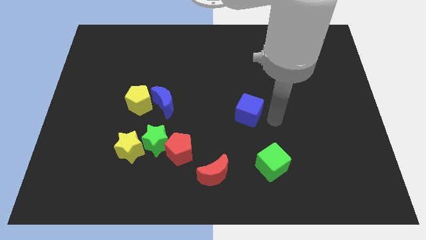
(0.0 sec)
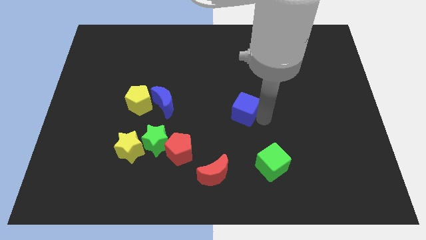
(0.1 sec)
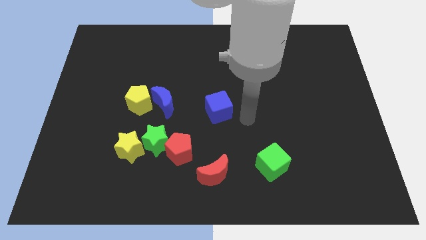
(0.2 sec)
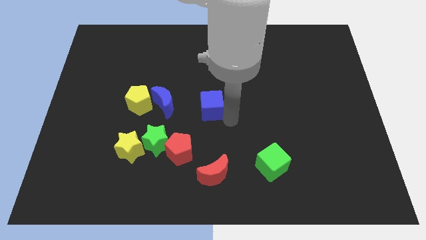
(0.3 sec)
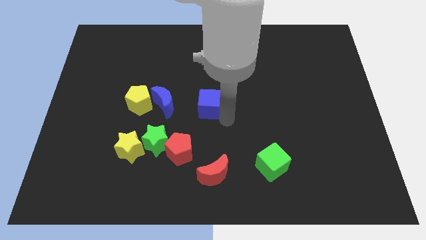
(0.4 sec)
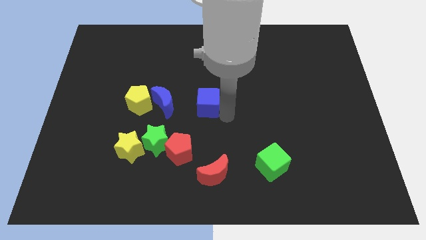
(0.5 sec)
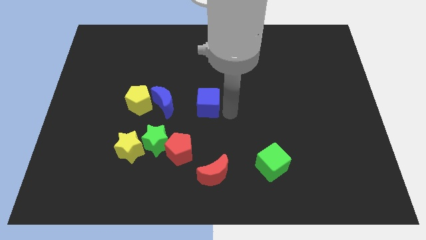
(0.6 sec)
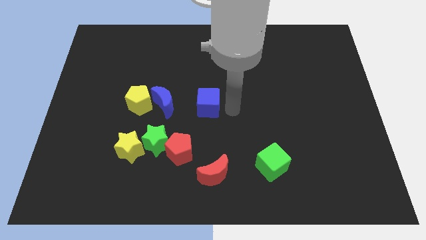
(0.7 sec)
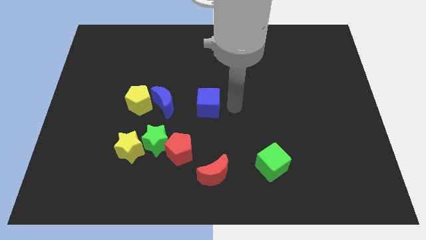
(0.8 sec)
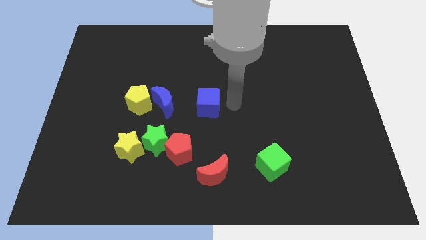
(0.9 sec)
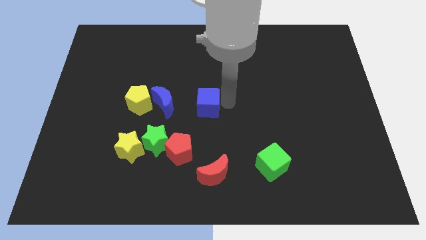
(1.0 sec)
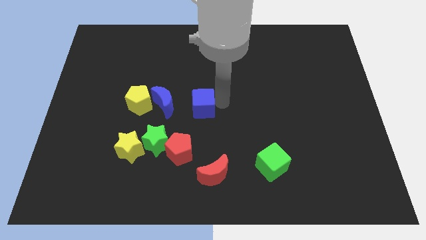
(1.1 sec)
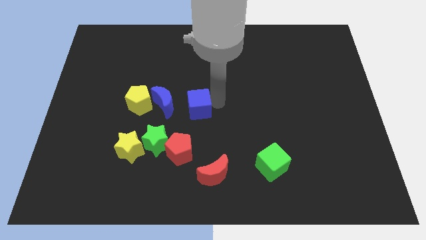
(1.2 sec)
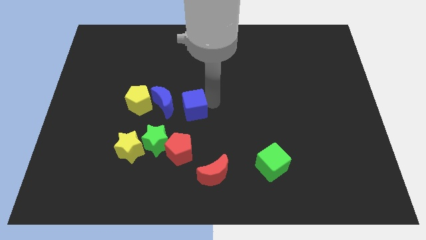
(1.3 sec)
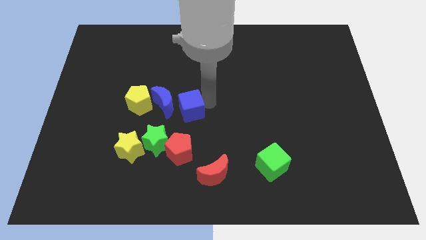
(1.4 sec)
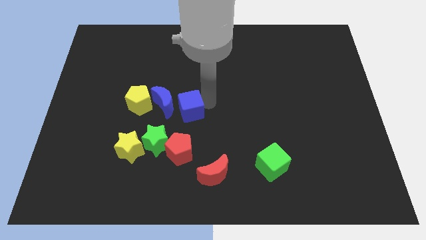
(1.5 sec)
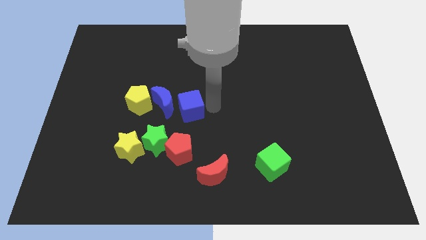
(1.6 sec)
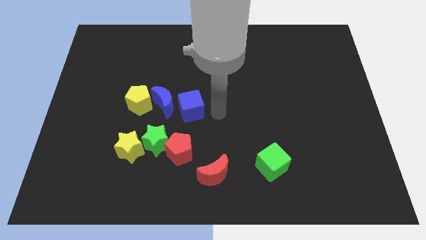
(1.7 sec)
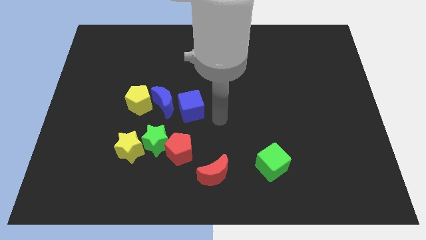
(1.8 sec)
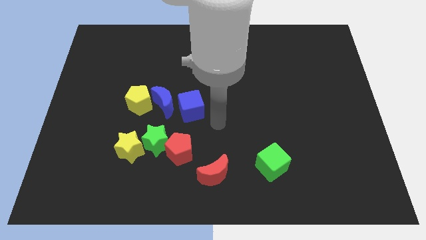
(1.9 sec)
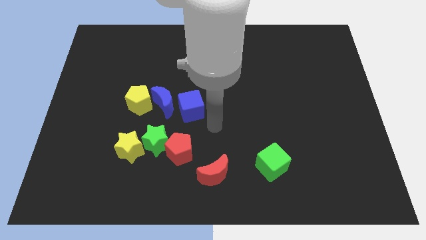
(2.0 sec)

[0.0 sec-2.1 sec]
move the blue cube towards the blue crescent

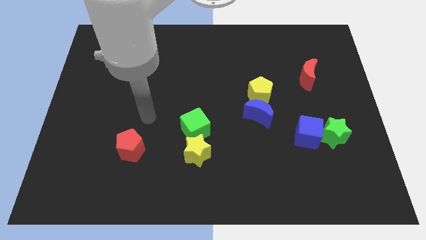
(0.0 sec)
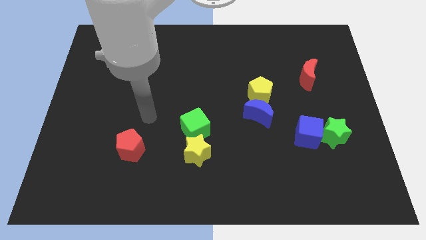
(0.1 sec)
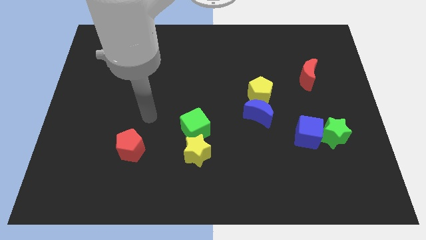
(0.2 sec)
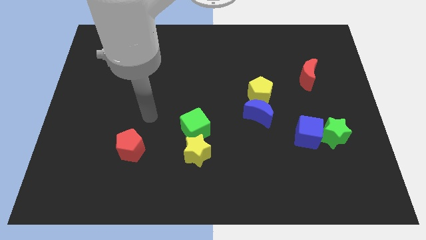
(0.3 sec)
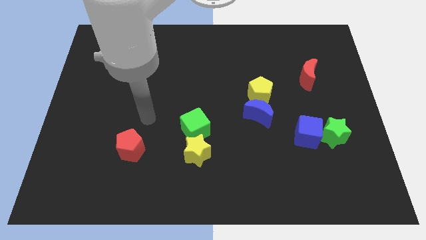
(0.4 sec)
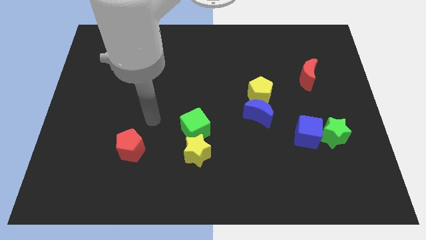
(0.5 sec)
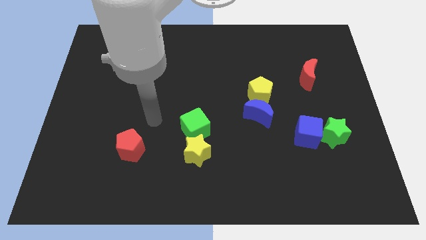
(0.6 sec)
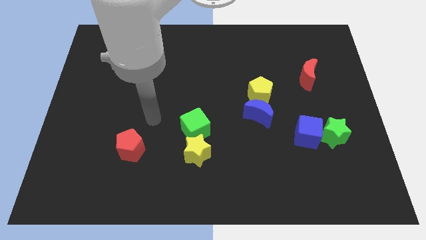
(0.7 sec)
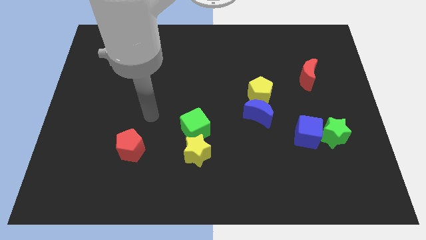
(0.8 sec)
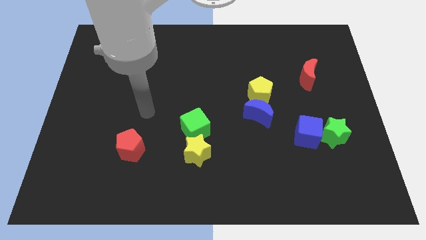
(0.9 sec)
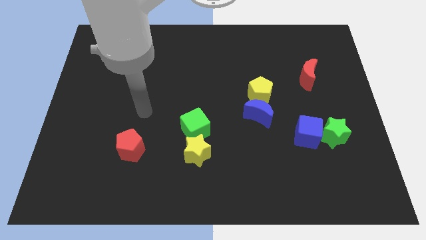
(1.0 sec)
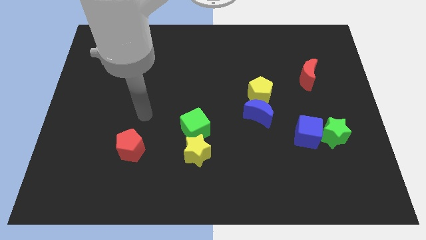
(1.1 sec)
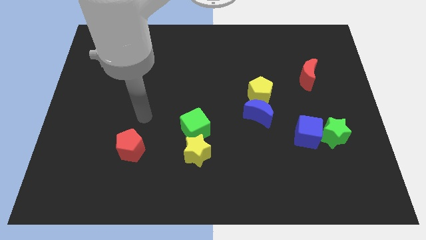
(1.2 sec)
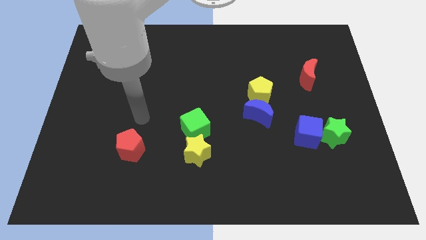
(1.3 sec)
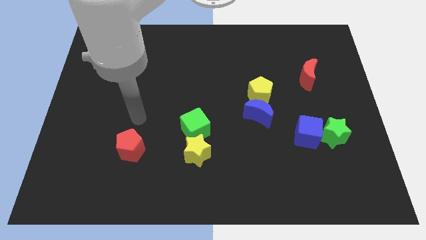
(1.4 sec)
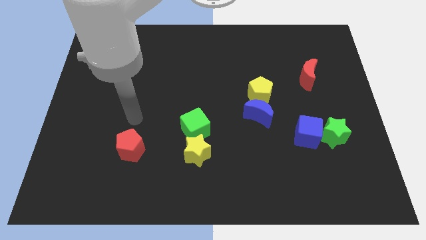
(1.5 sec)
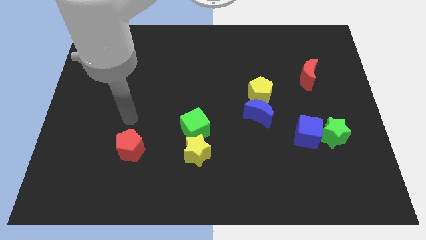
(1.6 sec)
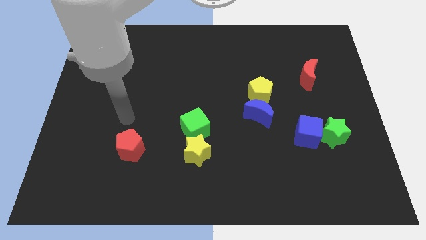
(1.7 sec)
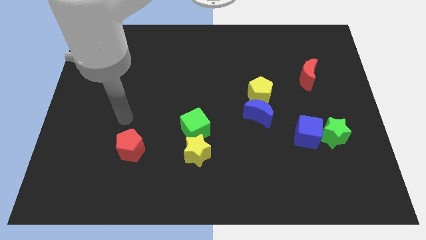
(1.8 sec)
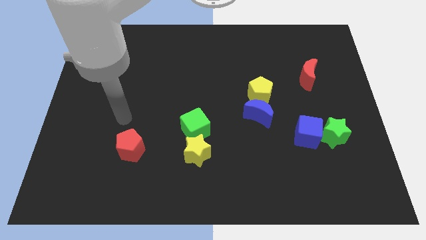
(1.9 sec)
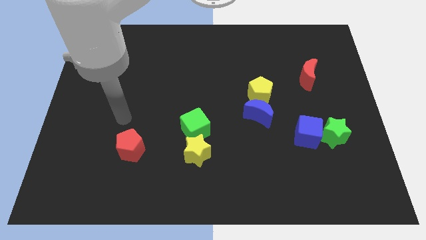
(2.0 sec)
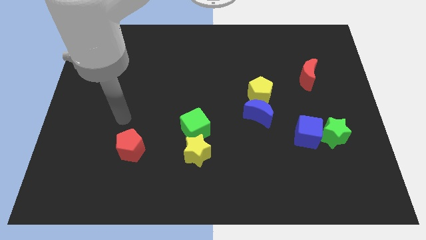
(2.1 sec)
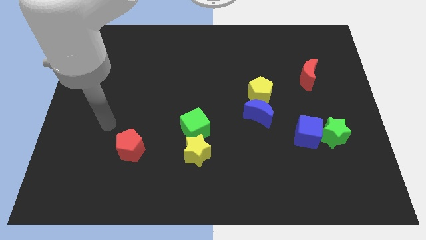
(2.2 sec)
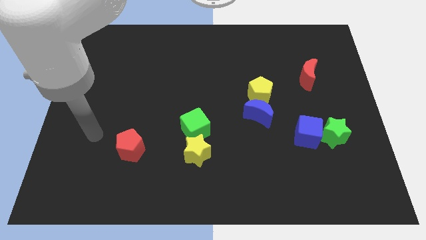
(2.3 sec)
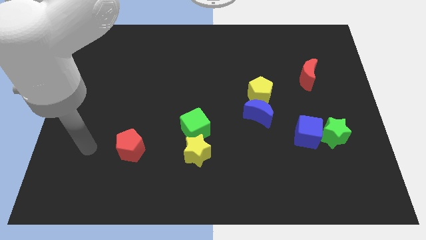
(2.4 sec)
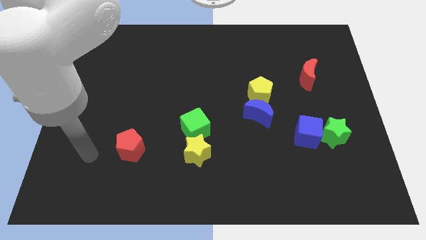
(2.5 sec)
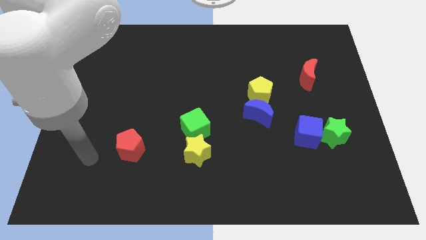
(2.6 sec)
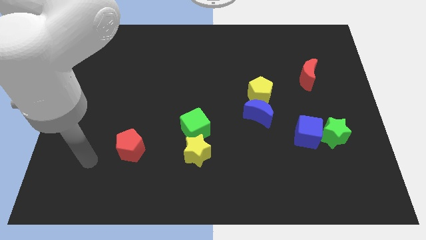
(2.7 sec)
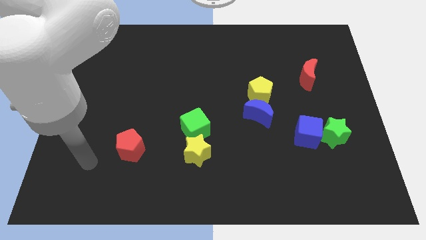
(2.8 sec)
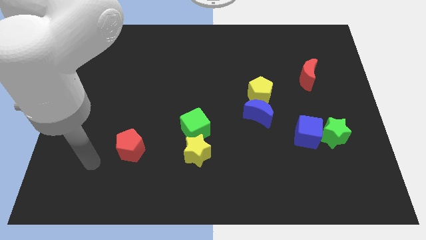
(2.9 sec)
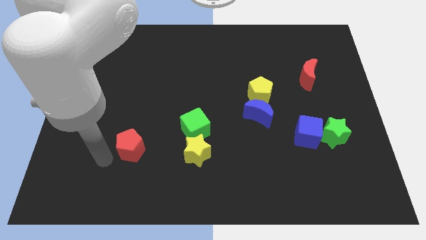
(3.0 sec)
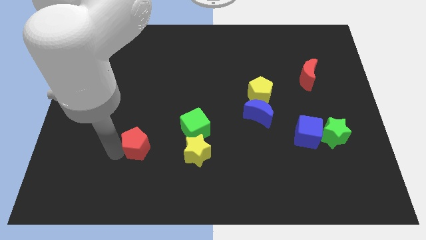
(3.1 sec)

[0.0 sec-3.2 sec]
tap the red pentagon

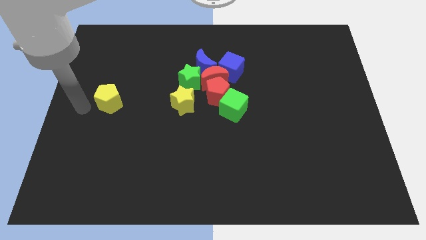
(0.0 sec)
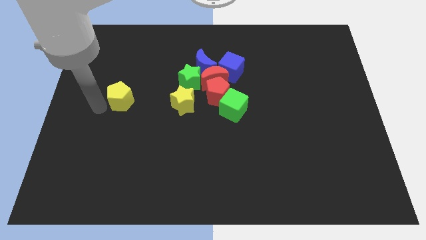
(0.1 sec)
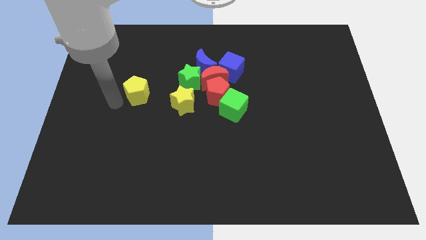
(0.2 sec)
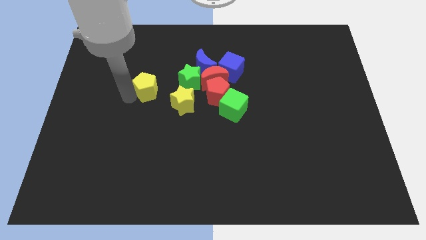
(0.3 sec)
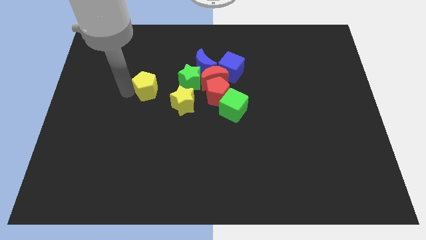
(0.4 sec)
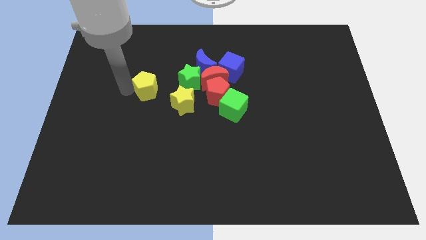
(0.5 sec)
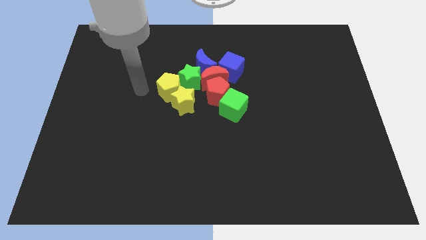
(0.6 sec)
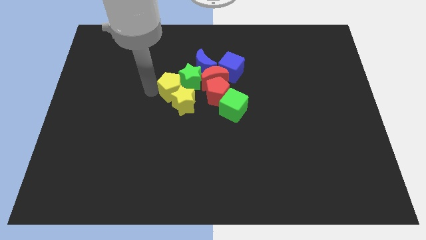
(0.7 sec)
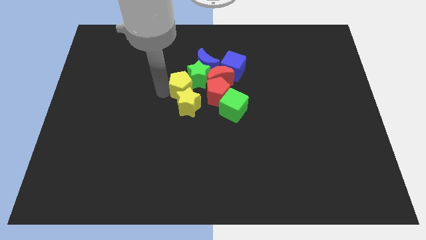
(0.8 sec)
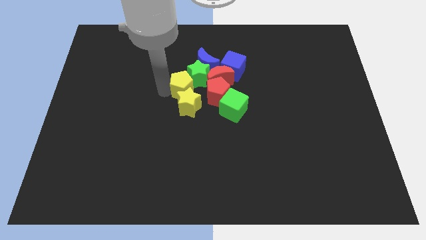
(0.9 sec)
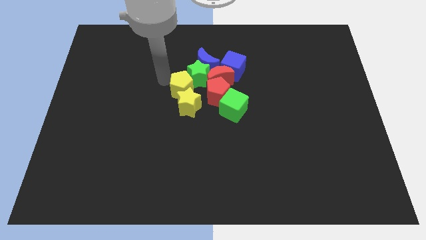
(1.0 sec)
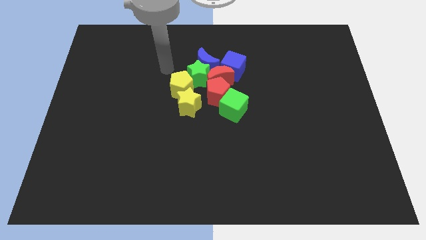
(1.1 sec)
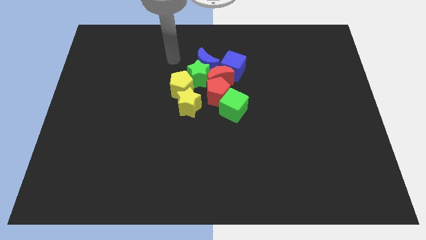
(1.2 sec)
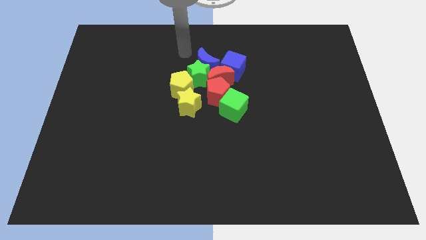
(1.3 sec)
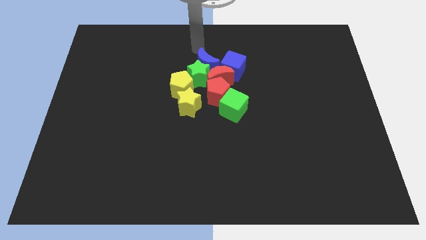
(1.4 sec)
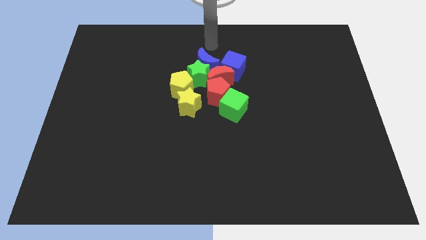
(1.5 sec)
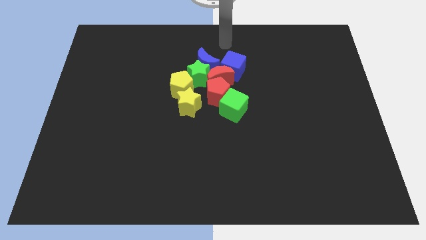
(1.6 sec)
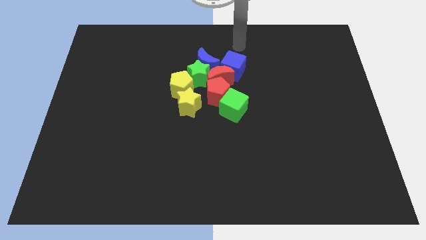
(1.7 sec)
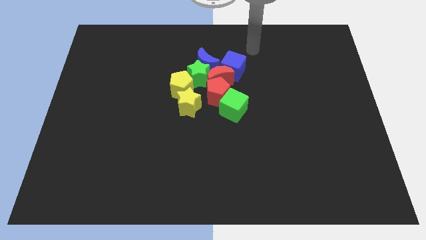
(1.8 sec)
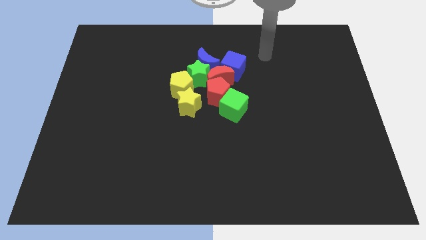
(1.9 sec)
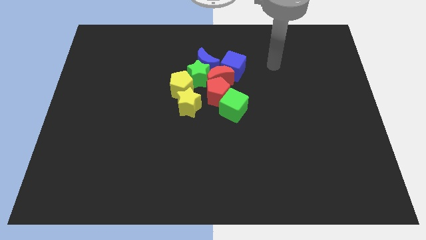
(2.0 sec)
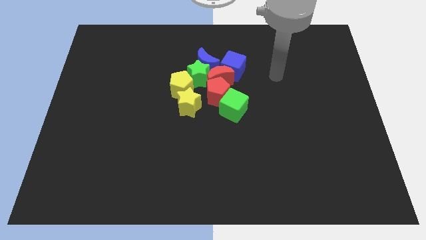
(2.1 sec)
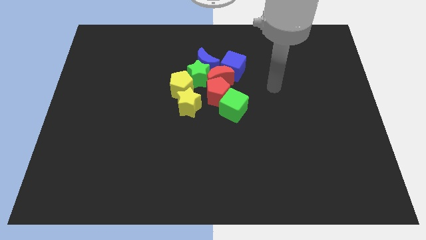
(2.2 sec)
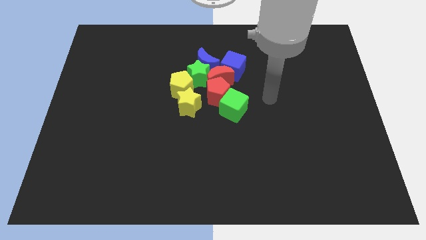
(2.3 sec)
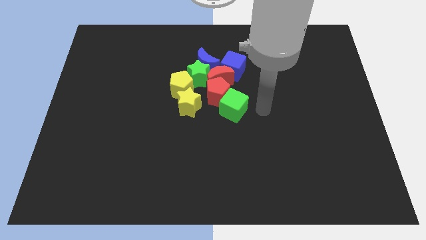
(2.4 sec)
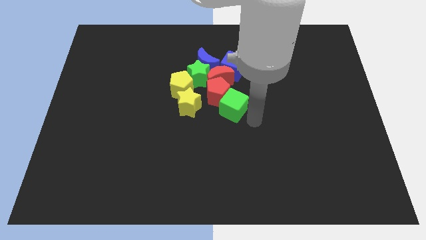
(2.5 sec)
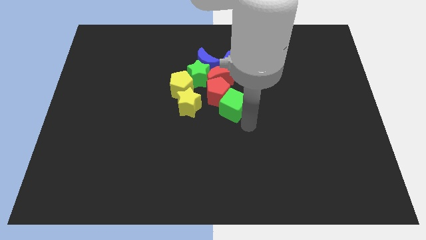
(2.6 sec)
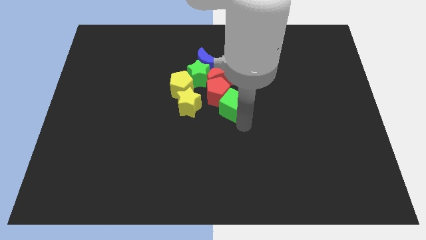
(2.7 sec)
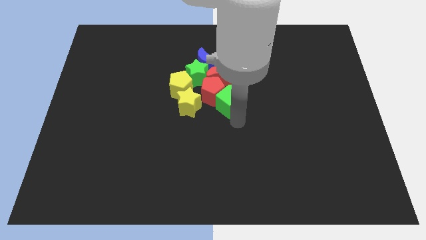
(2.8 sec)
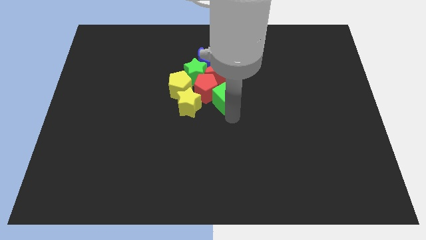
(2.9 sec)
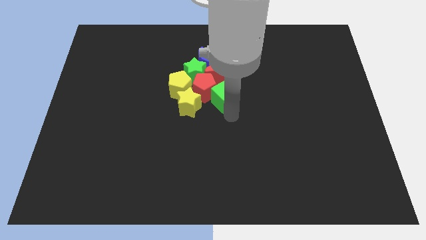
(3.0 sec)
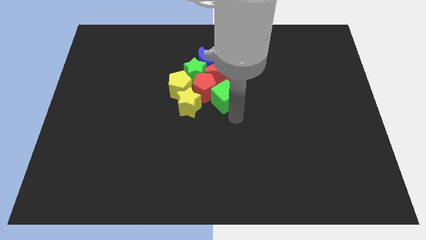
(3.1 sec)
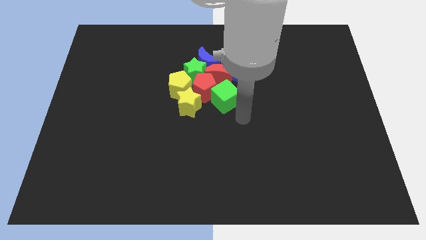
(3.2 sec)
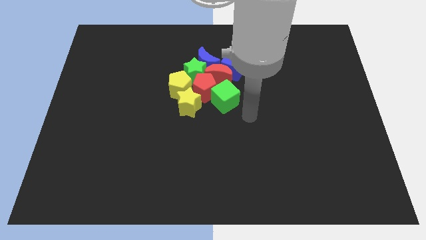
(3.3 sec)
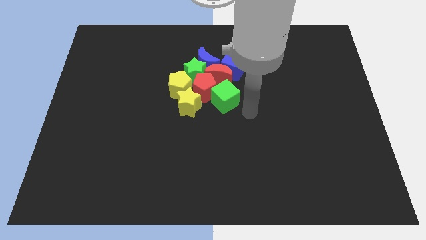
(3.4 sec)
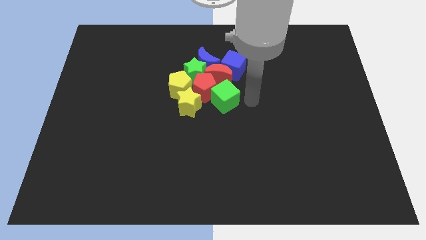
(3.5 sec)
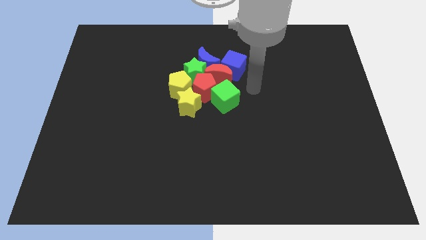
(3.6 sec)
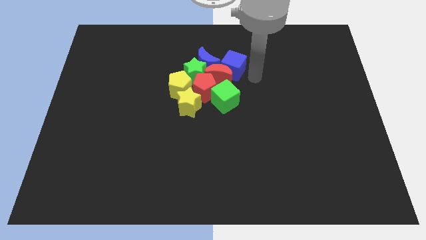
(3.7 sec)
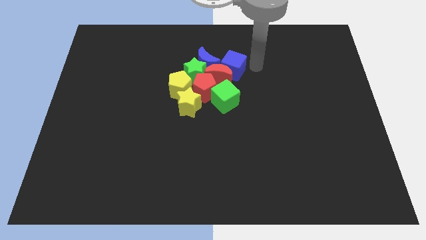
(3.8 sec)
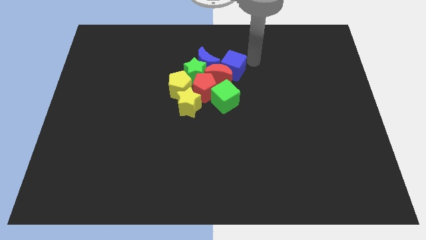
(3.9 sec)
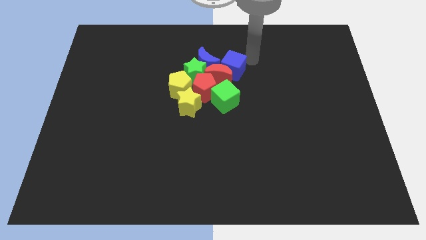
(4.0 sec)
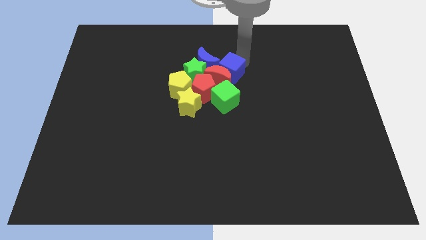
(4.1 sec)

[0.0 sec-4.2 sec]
place the yellow pentagon towards the top left side of the yellow star
